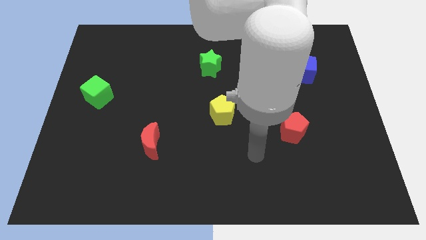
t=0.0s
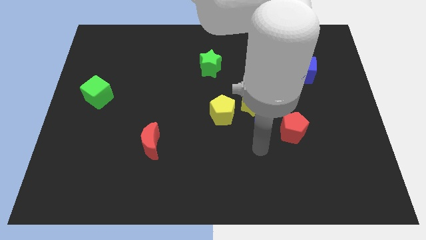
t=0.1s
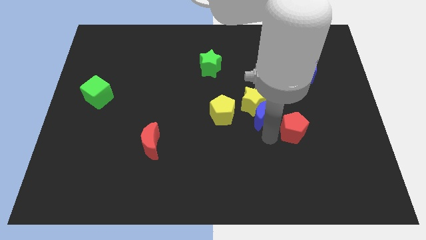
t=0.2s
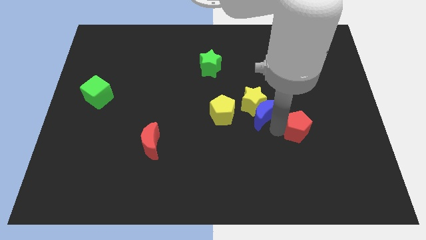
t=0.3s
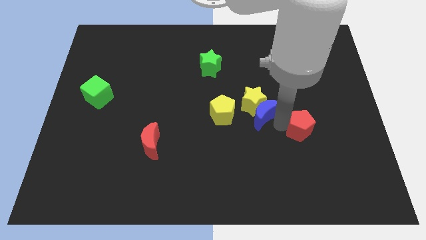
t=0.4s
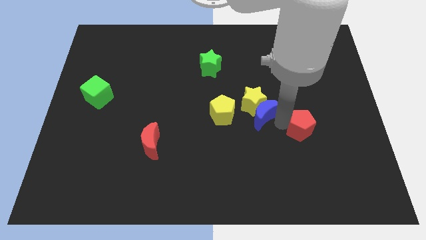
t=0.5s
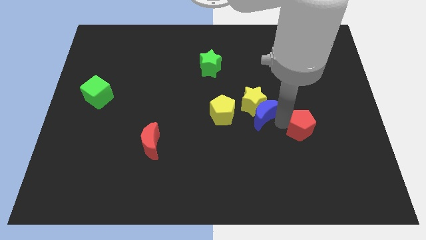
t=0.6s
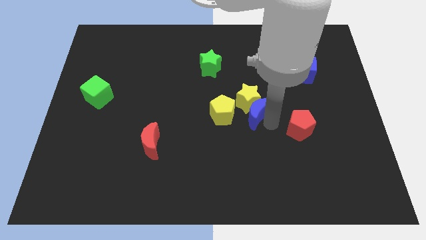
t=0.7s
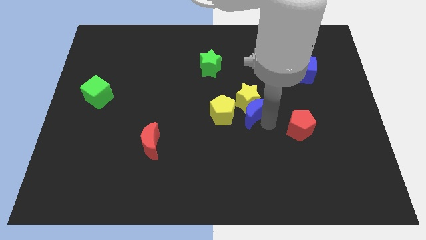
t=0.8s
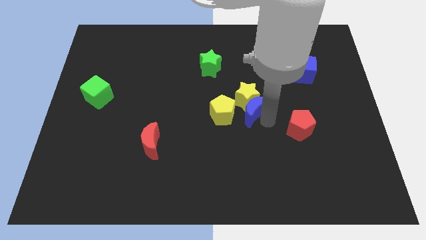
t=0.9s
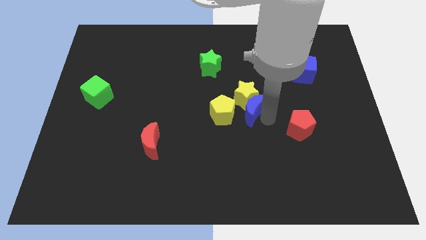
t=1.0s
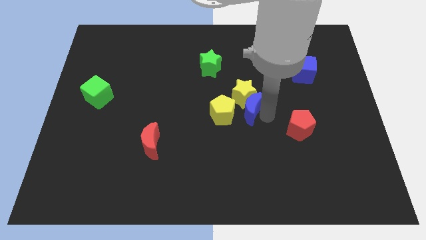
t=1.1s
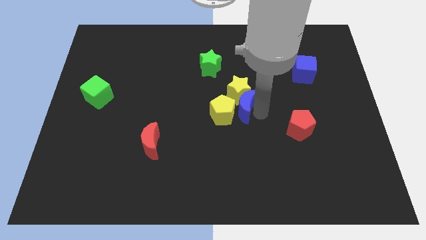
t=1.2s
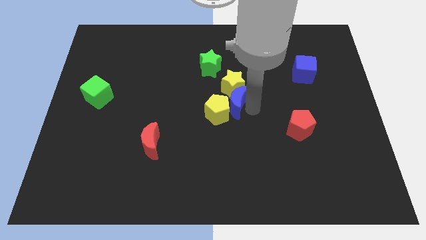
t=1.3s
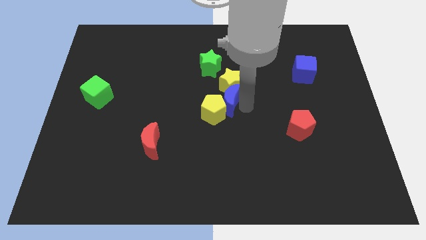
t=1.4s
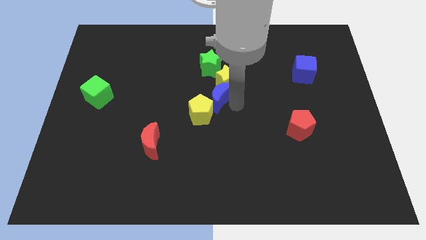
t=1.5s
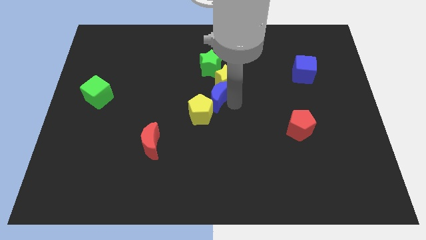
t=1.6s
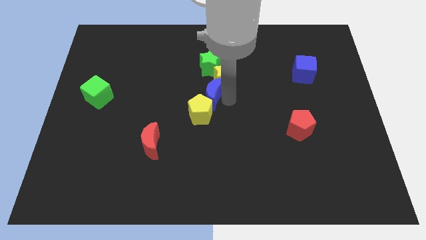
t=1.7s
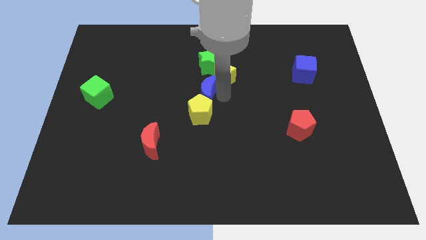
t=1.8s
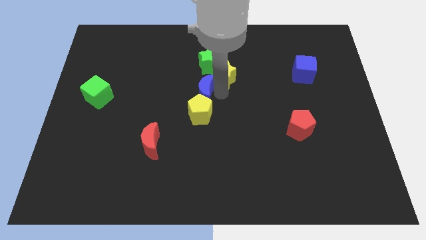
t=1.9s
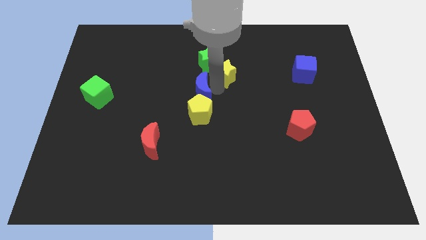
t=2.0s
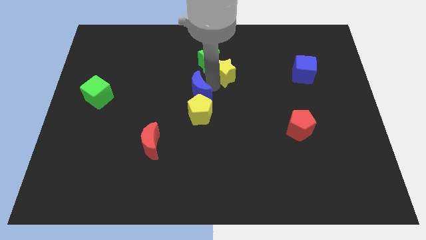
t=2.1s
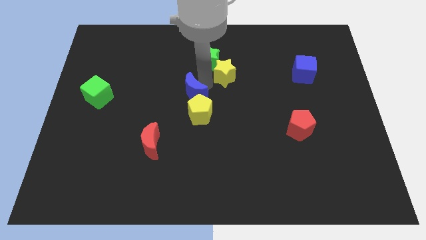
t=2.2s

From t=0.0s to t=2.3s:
move the blue crescent away from the red pentagon

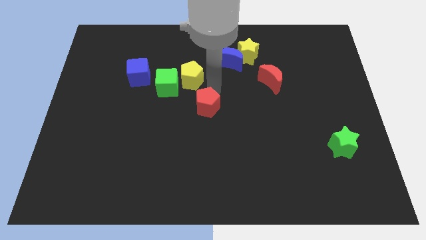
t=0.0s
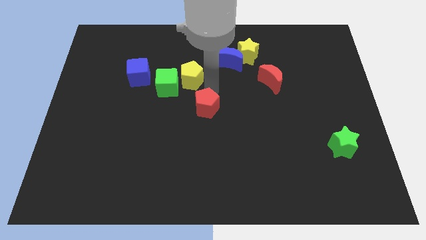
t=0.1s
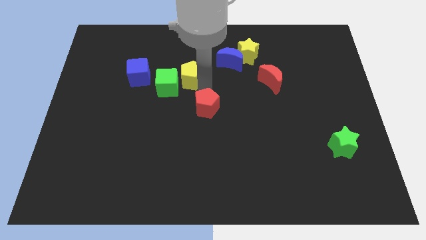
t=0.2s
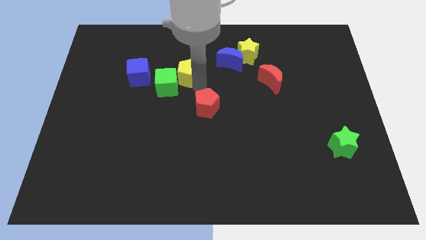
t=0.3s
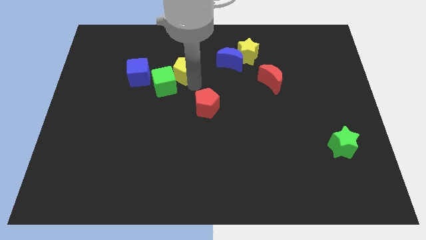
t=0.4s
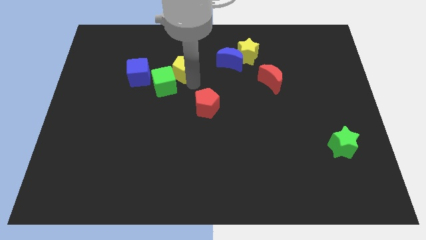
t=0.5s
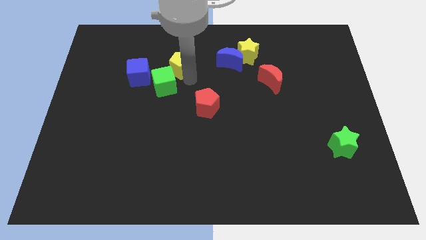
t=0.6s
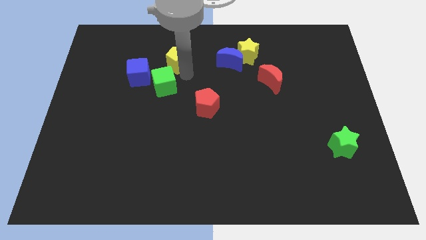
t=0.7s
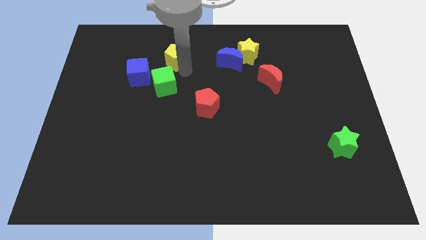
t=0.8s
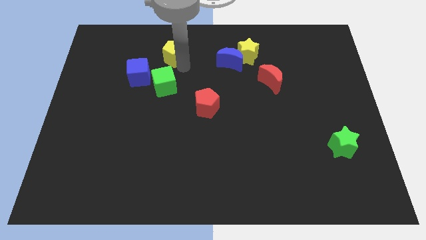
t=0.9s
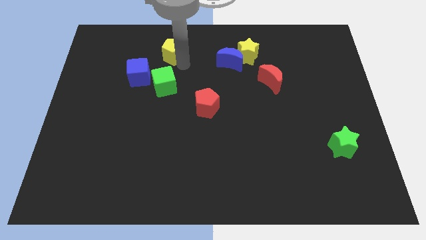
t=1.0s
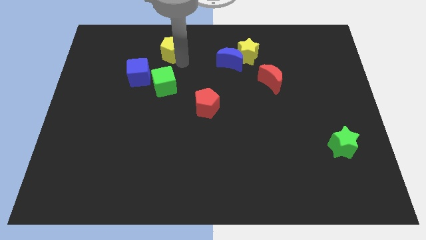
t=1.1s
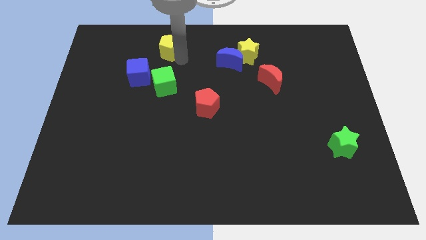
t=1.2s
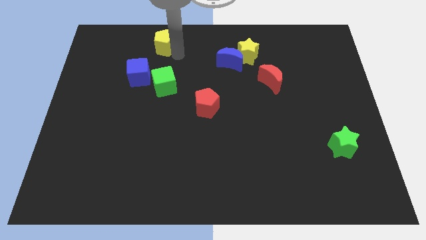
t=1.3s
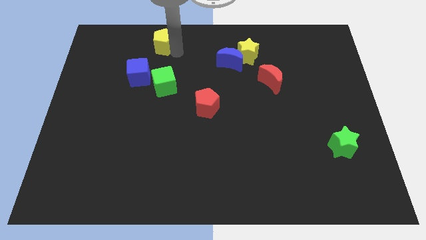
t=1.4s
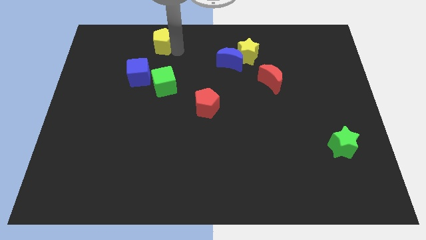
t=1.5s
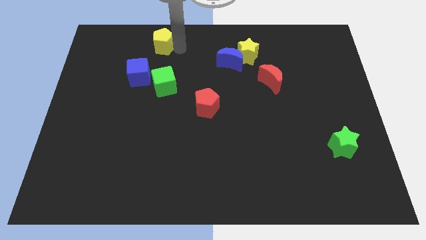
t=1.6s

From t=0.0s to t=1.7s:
move the yellow pentagon towards the top of the green cube

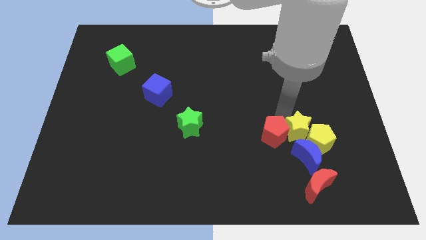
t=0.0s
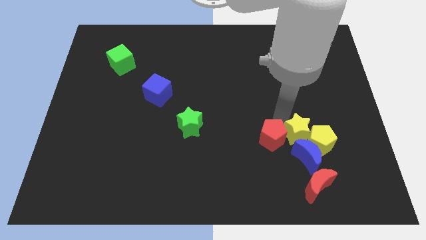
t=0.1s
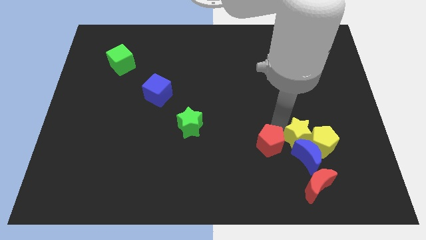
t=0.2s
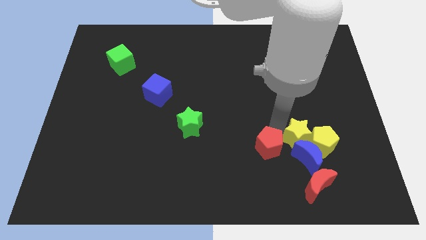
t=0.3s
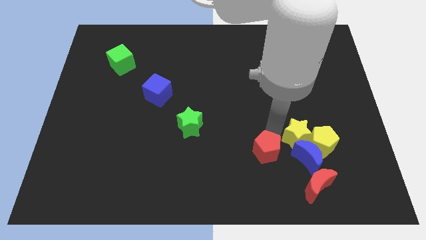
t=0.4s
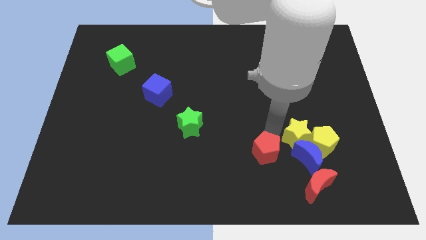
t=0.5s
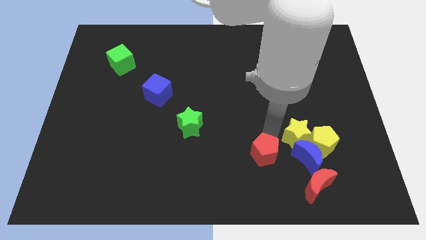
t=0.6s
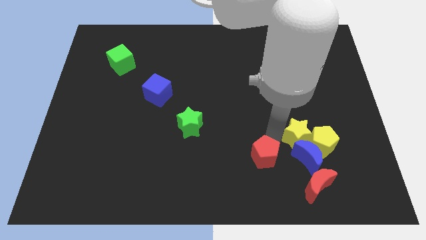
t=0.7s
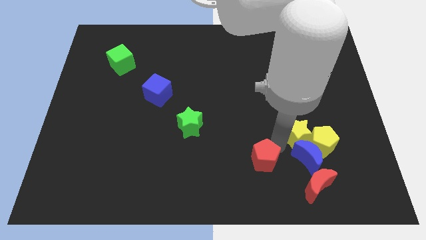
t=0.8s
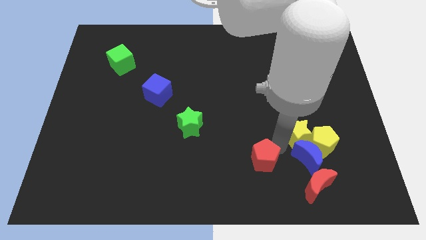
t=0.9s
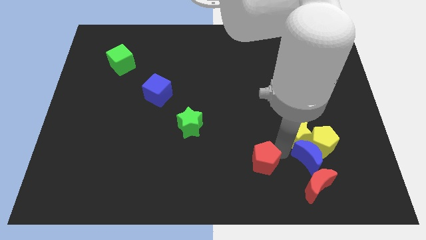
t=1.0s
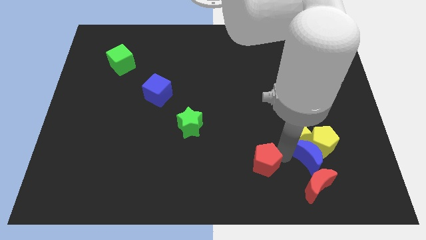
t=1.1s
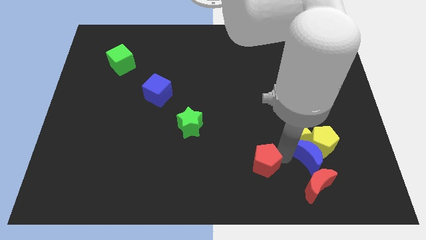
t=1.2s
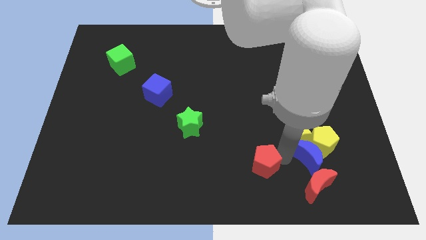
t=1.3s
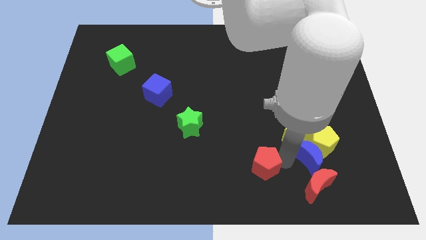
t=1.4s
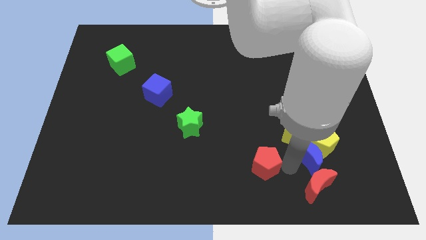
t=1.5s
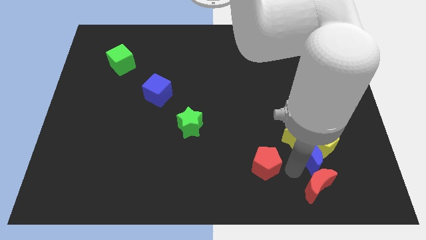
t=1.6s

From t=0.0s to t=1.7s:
separate the red pentagon from the group of blocks

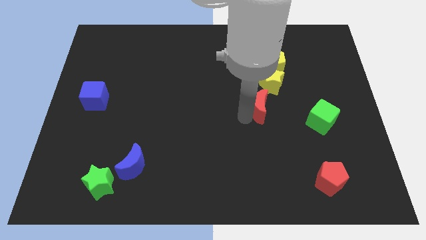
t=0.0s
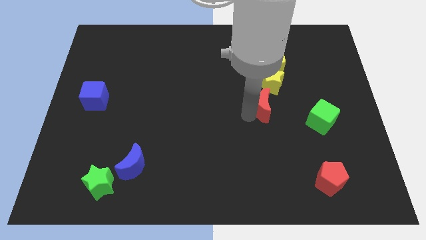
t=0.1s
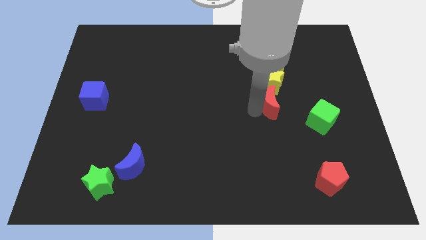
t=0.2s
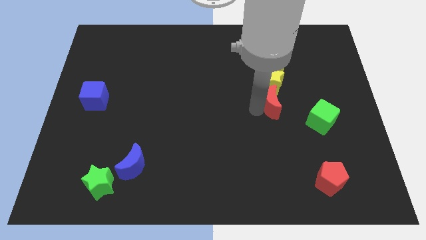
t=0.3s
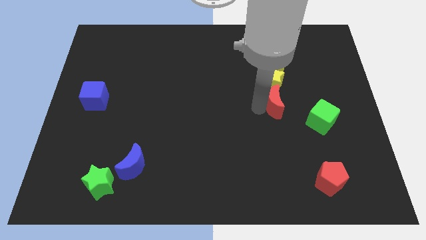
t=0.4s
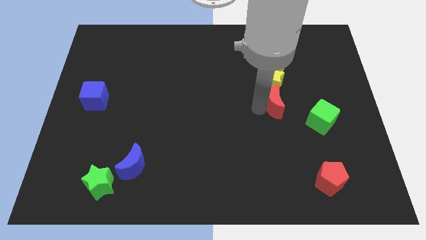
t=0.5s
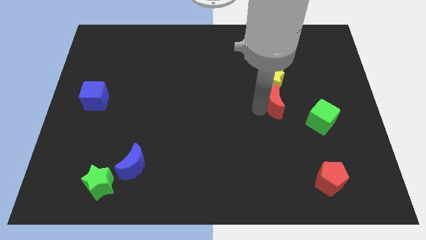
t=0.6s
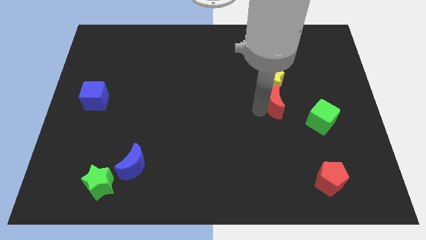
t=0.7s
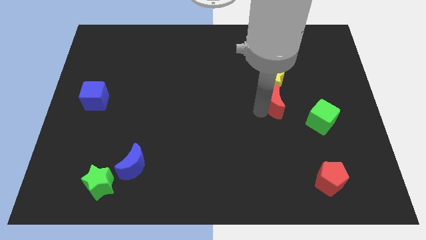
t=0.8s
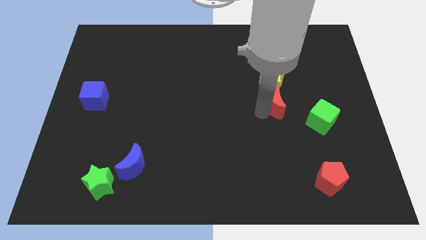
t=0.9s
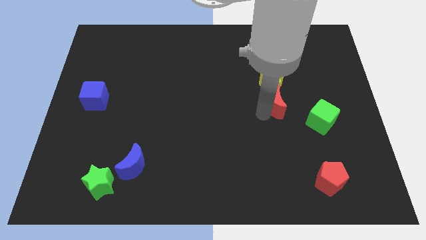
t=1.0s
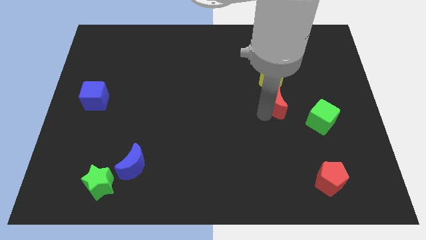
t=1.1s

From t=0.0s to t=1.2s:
place red crescent to the bottom side of the yellow star

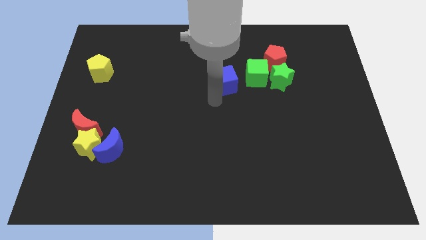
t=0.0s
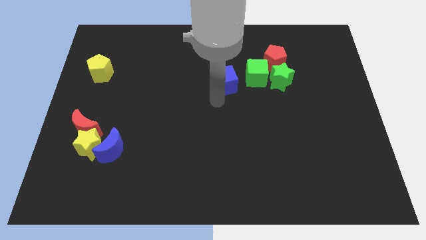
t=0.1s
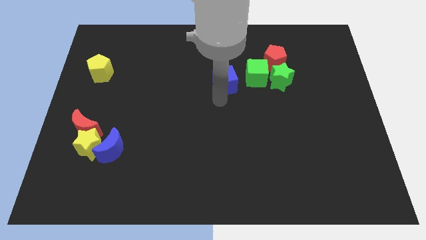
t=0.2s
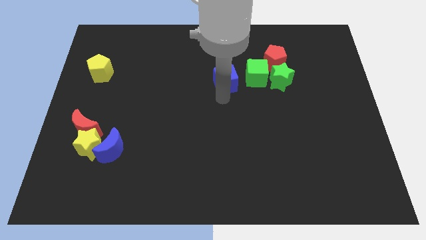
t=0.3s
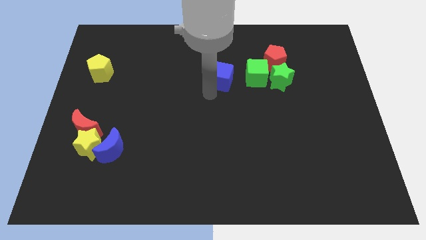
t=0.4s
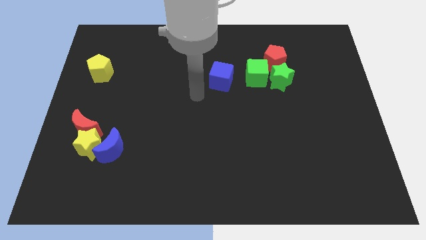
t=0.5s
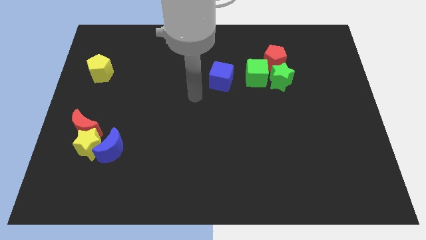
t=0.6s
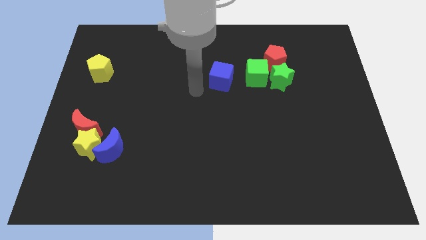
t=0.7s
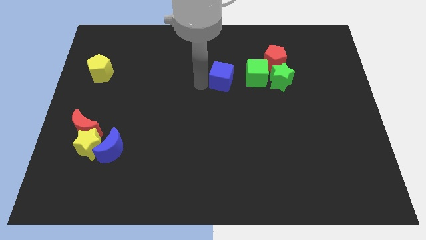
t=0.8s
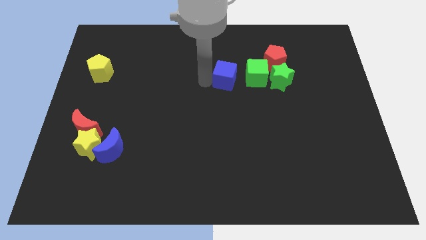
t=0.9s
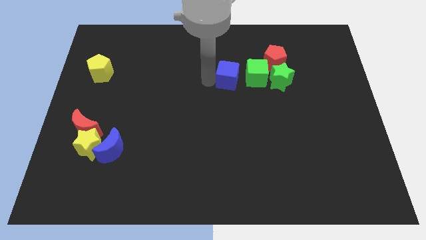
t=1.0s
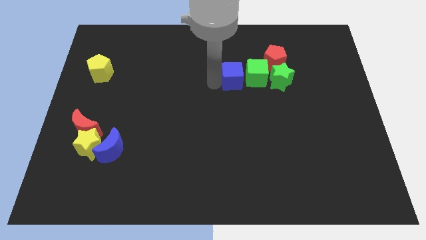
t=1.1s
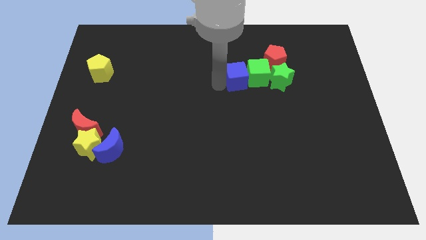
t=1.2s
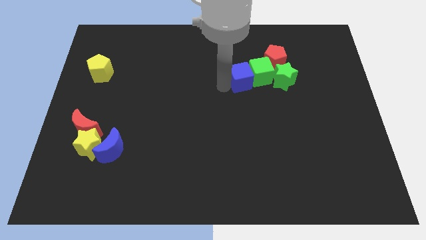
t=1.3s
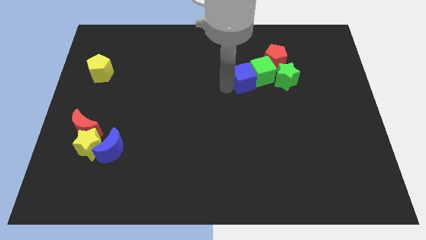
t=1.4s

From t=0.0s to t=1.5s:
push blue cube into the green cube

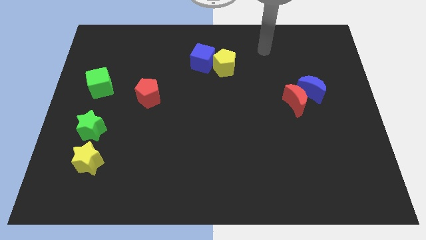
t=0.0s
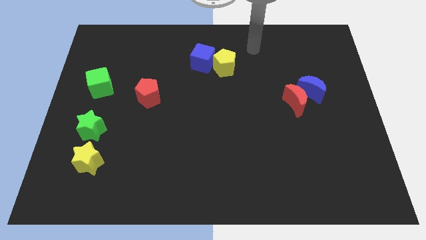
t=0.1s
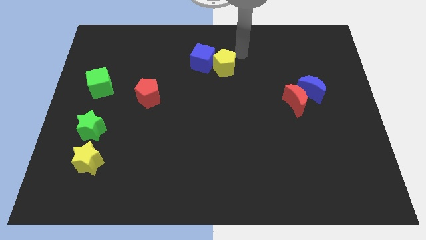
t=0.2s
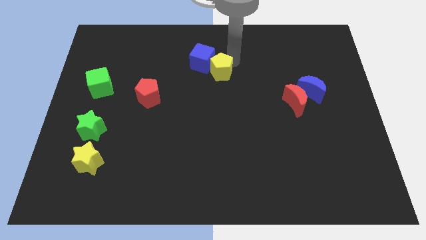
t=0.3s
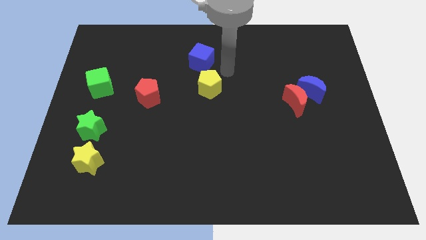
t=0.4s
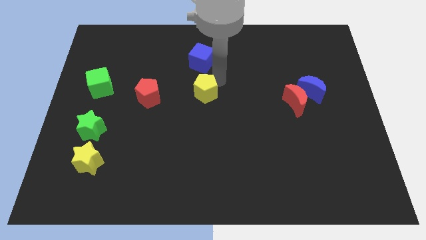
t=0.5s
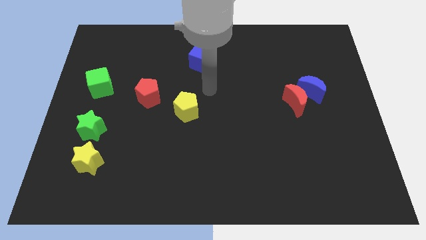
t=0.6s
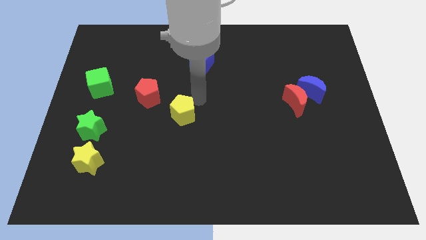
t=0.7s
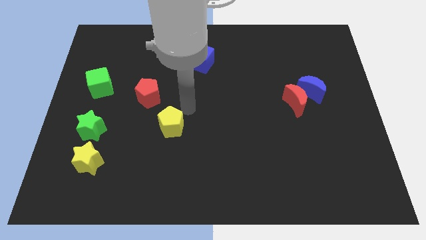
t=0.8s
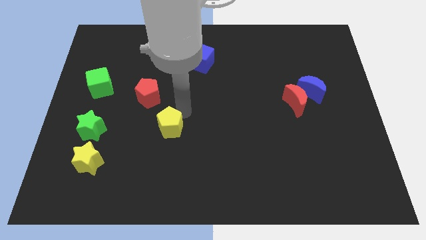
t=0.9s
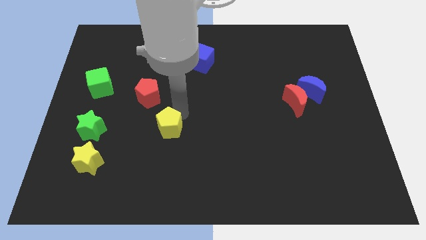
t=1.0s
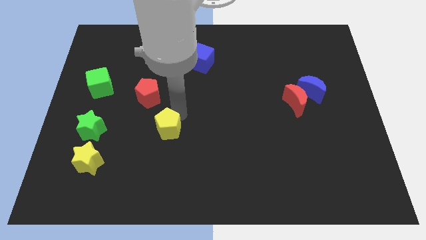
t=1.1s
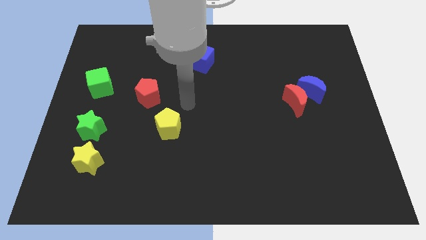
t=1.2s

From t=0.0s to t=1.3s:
move the yellow pentagon down slightly
